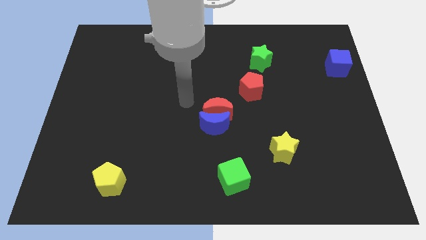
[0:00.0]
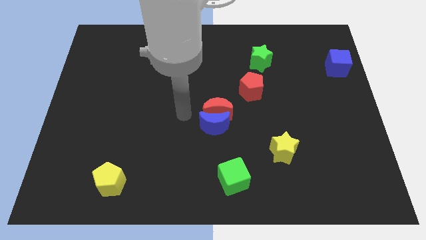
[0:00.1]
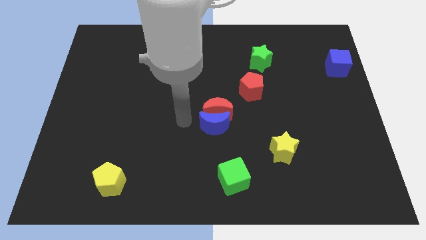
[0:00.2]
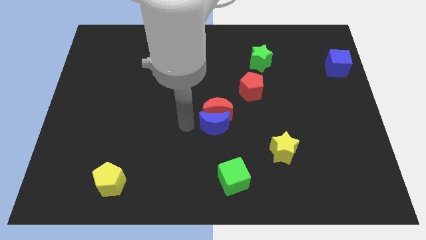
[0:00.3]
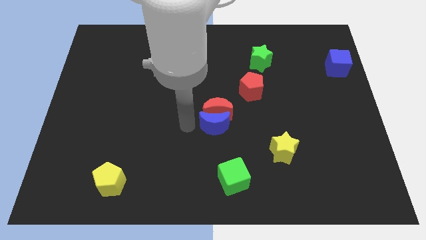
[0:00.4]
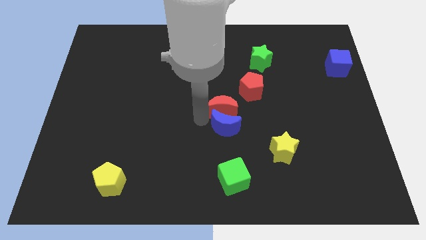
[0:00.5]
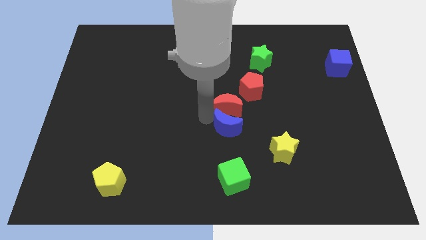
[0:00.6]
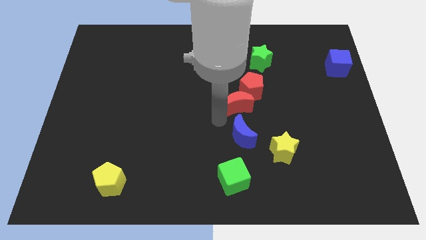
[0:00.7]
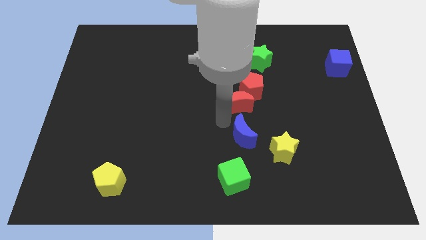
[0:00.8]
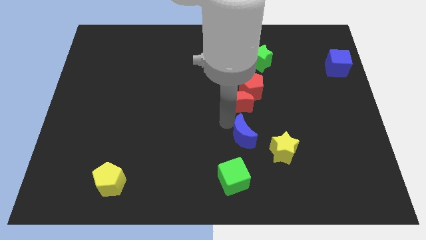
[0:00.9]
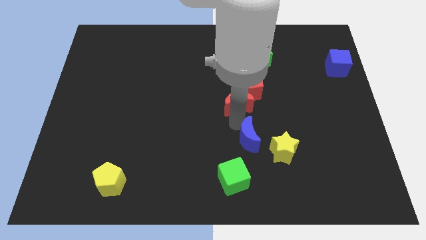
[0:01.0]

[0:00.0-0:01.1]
separate the red and blue crescents

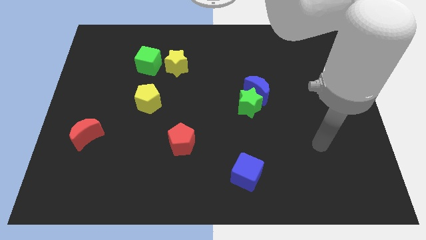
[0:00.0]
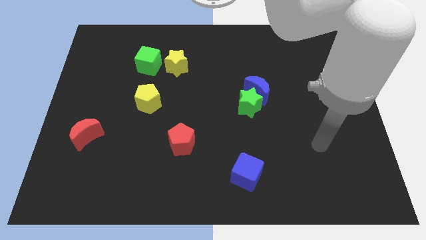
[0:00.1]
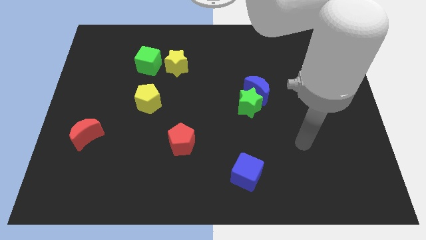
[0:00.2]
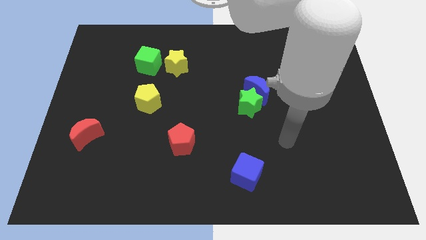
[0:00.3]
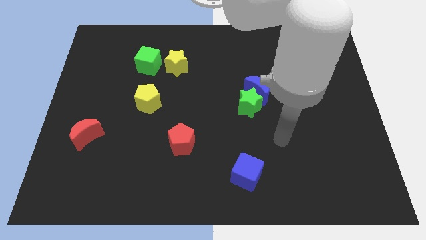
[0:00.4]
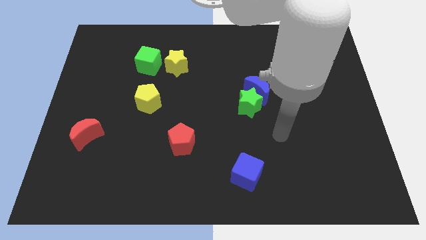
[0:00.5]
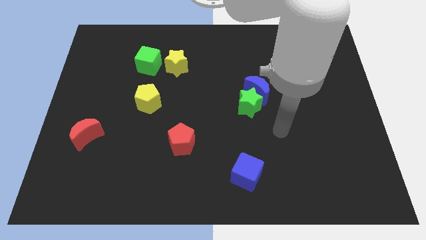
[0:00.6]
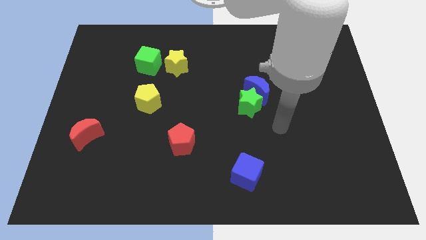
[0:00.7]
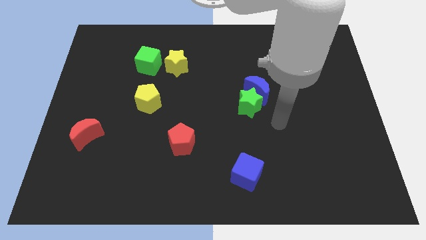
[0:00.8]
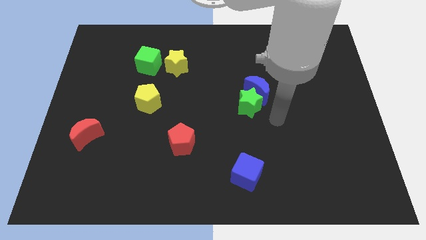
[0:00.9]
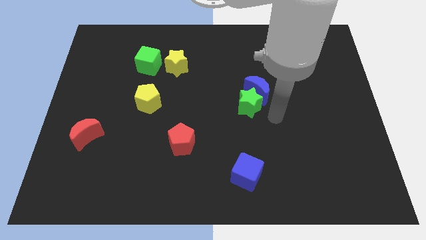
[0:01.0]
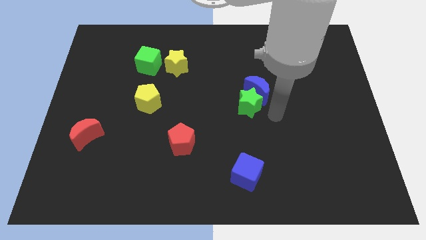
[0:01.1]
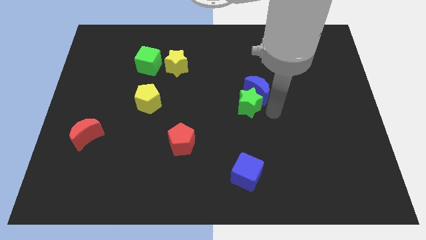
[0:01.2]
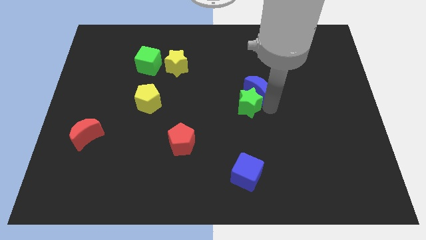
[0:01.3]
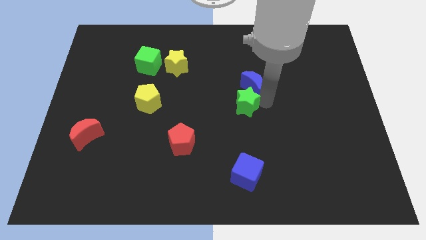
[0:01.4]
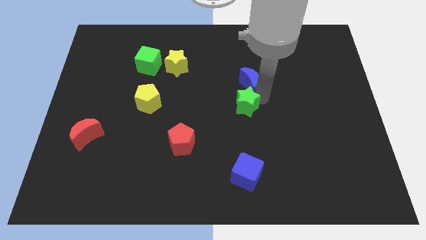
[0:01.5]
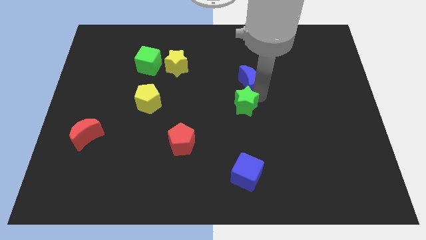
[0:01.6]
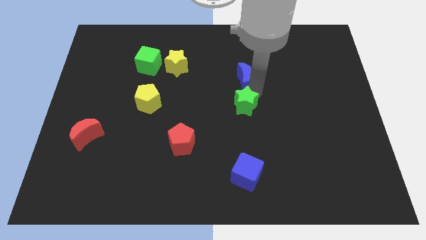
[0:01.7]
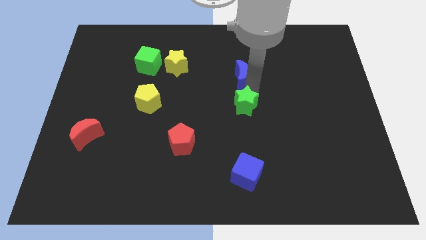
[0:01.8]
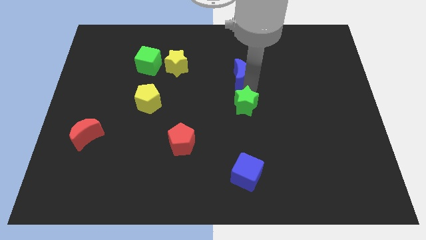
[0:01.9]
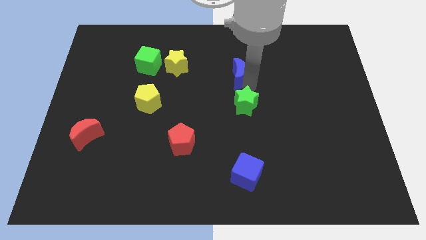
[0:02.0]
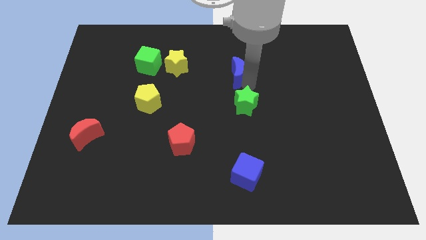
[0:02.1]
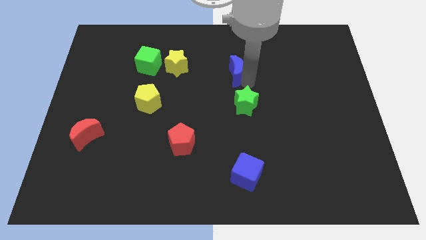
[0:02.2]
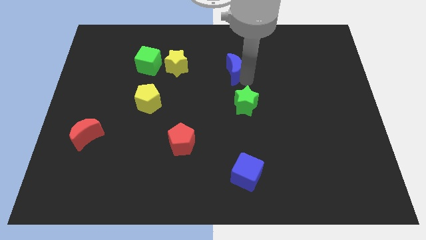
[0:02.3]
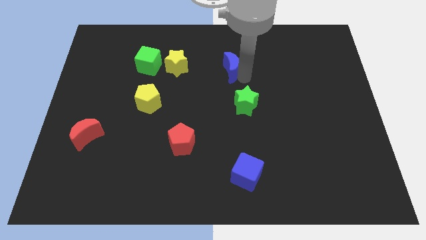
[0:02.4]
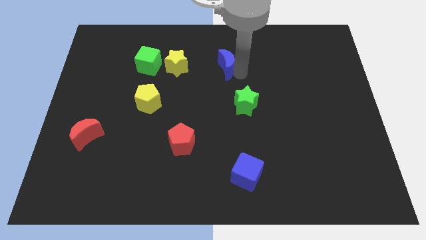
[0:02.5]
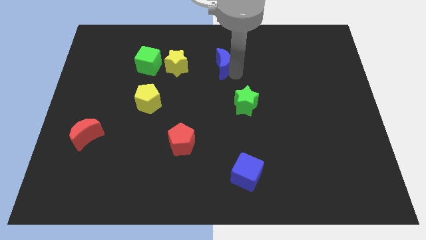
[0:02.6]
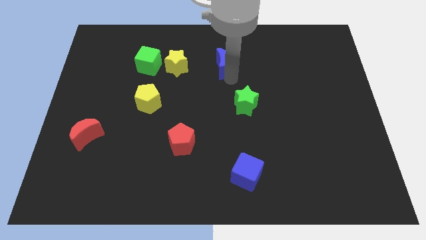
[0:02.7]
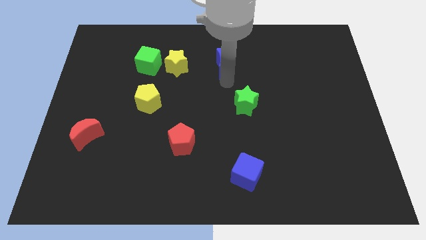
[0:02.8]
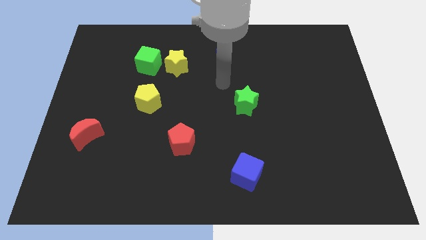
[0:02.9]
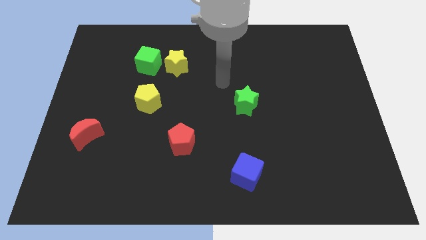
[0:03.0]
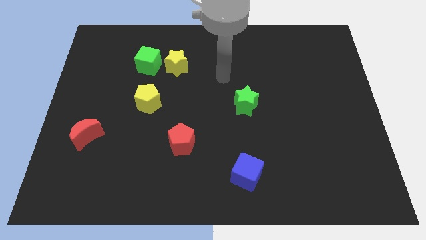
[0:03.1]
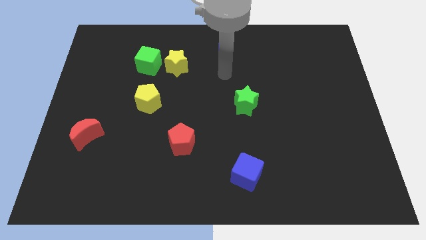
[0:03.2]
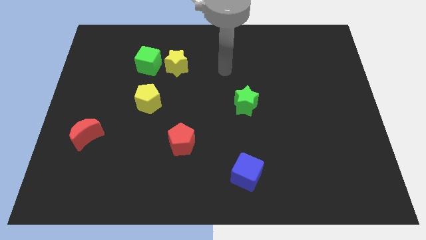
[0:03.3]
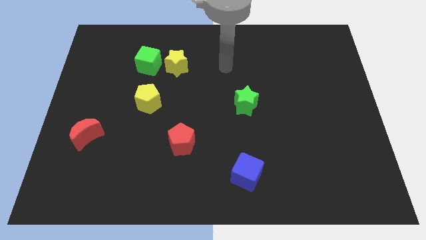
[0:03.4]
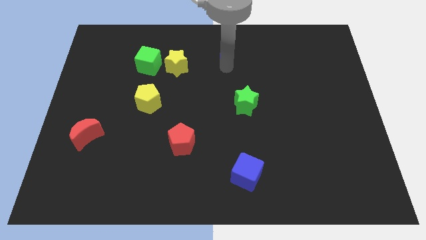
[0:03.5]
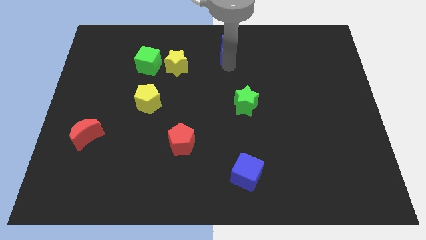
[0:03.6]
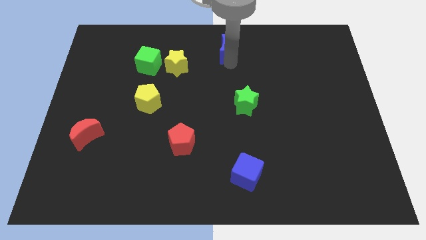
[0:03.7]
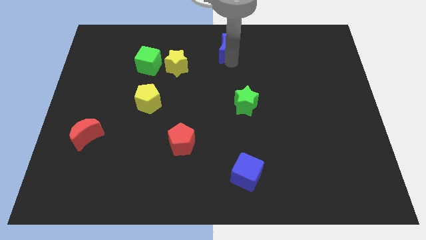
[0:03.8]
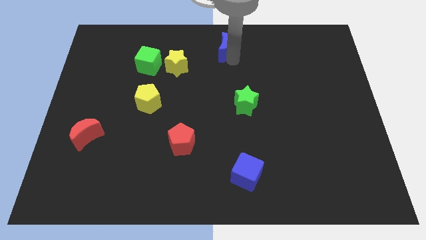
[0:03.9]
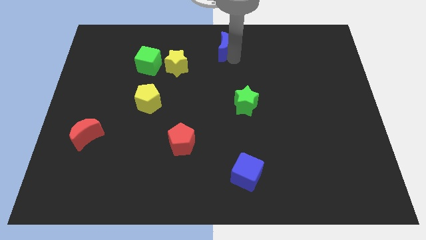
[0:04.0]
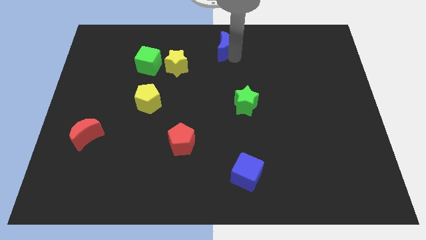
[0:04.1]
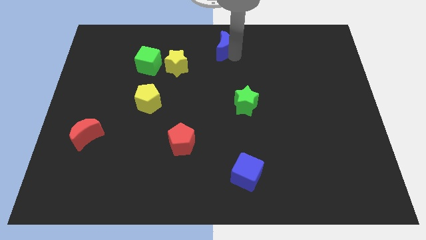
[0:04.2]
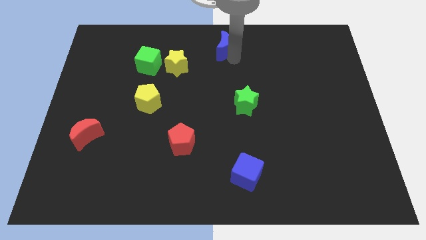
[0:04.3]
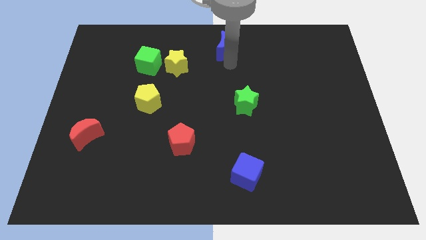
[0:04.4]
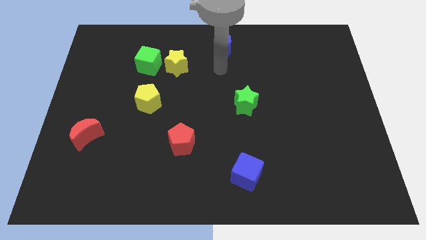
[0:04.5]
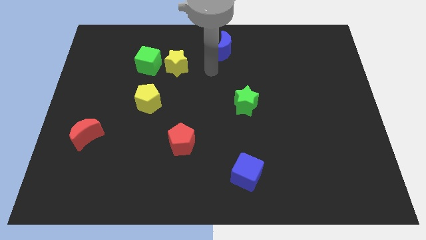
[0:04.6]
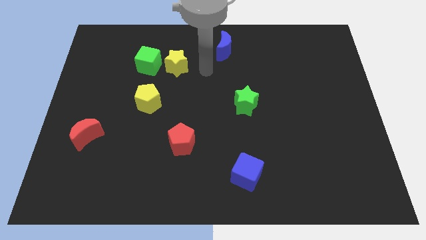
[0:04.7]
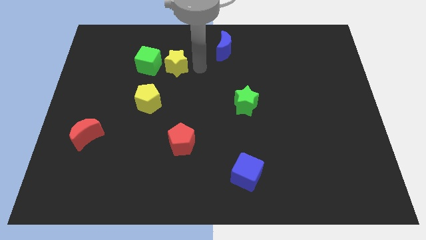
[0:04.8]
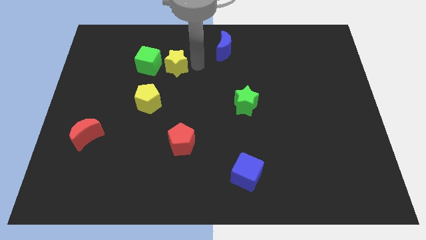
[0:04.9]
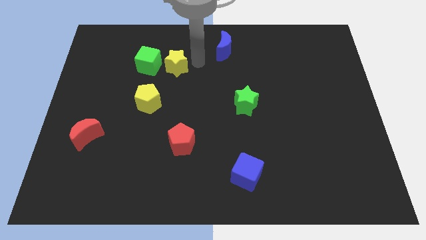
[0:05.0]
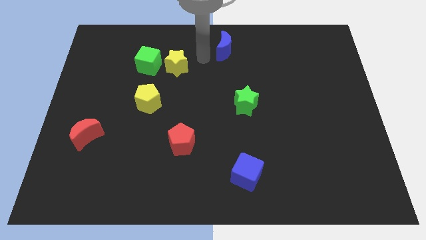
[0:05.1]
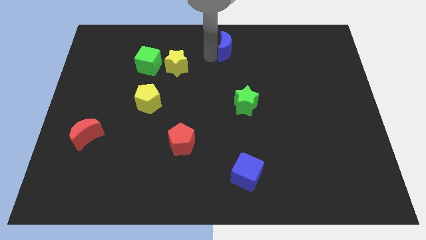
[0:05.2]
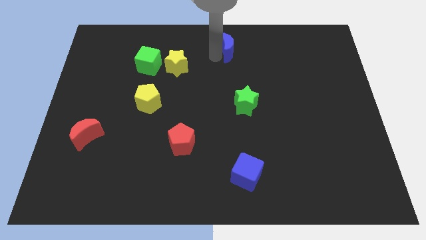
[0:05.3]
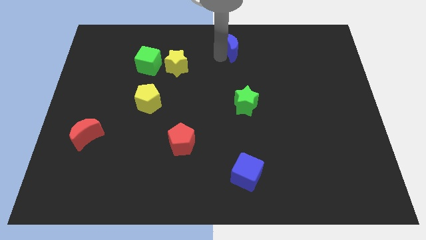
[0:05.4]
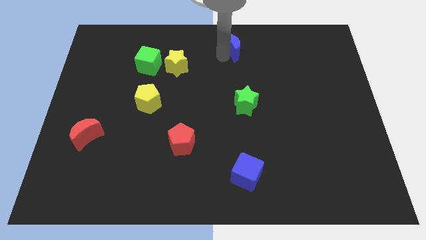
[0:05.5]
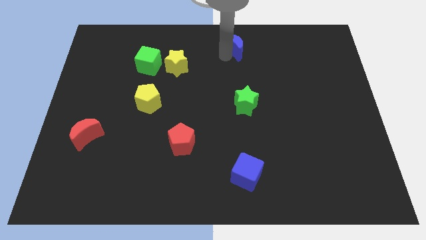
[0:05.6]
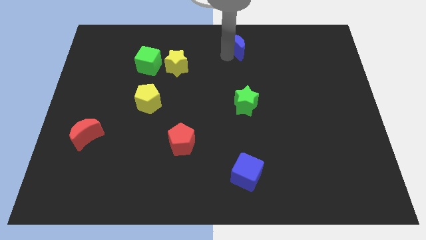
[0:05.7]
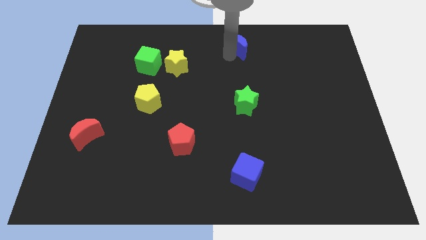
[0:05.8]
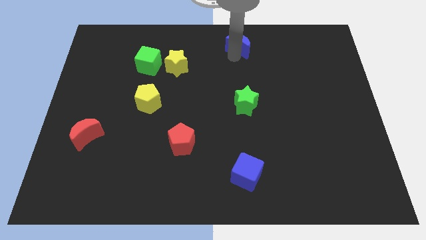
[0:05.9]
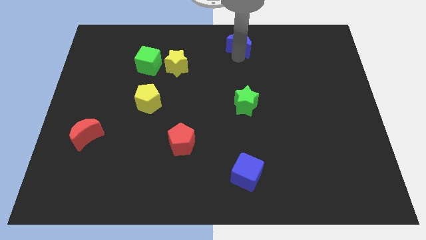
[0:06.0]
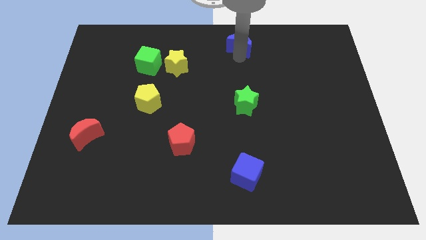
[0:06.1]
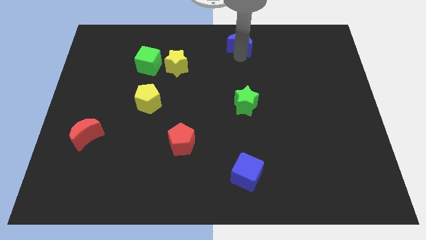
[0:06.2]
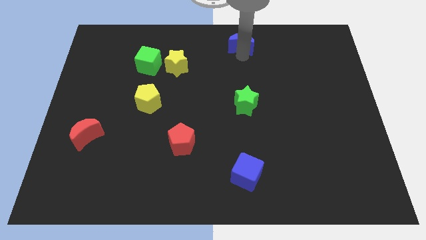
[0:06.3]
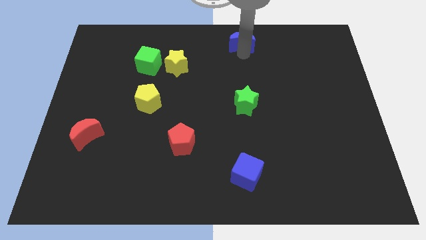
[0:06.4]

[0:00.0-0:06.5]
move the blue crescent towards the top center

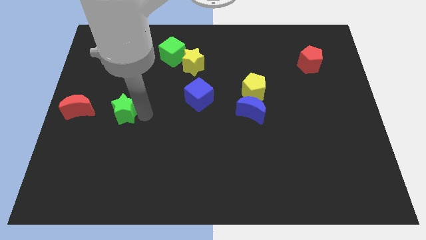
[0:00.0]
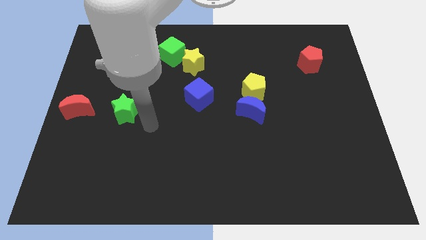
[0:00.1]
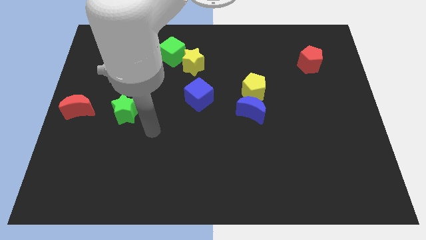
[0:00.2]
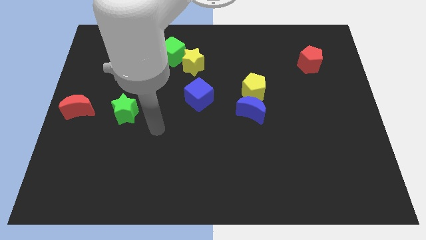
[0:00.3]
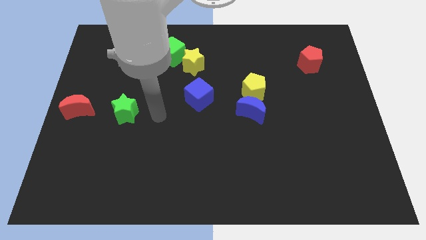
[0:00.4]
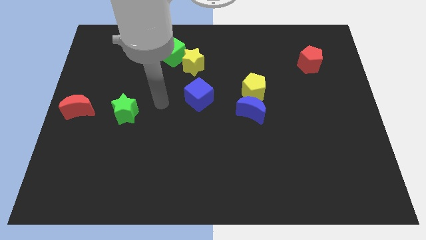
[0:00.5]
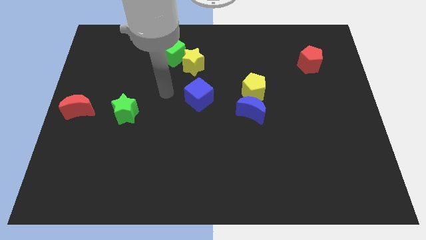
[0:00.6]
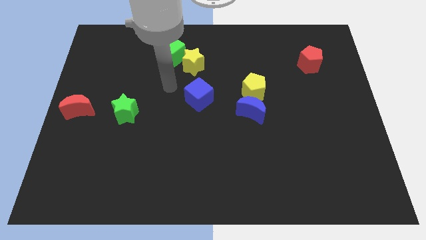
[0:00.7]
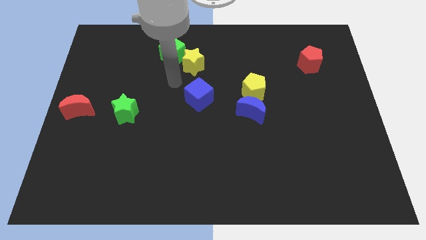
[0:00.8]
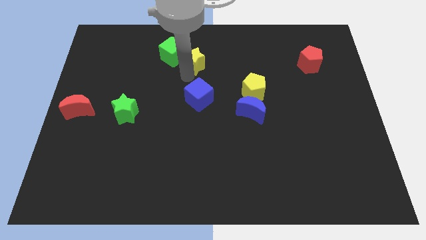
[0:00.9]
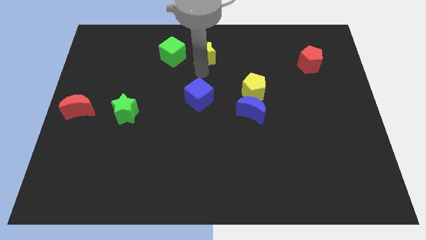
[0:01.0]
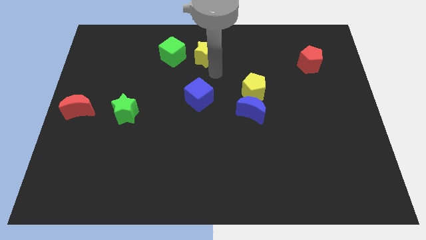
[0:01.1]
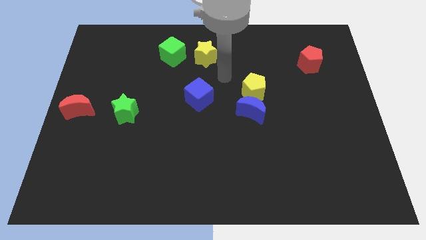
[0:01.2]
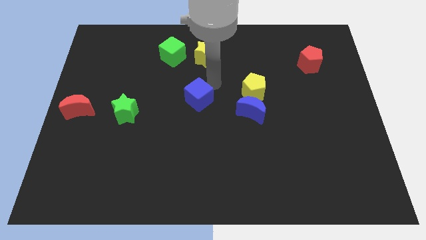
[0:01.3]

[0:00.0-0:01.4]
slightly push yellow star to the top center
